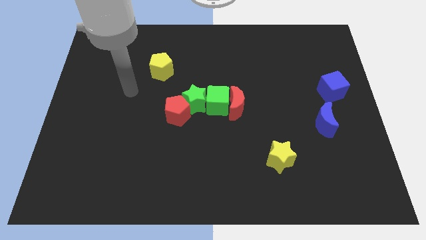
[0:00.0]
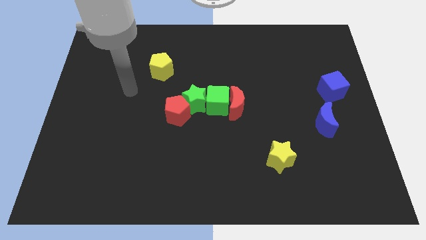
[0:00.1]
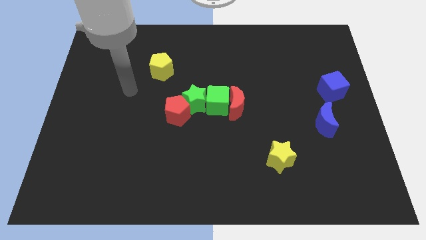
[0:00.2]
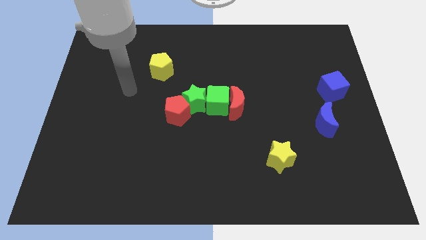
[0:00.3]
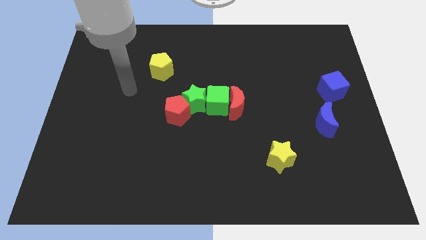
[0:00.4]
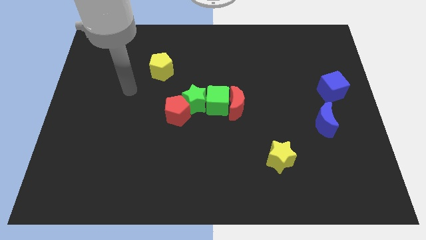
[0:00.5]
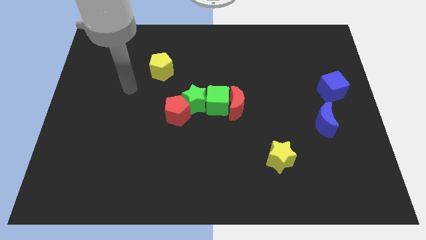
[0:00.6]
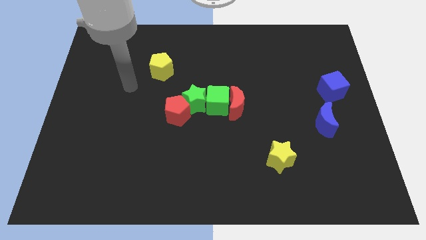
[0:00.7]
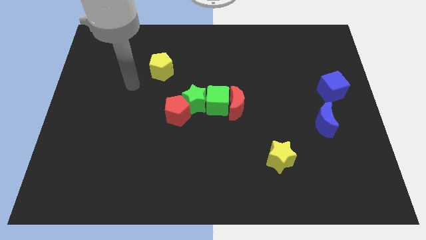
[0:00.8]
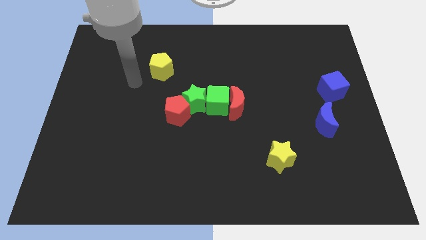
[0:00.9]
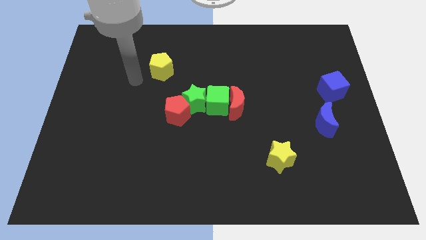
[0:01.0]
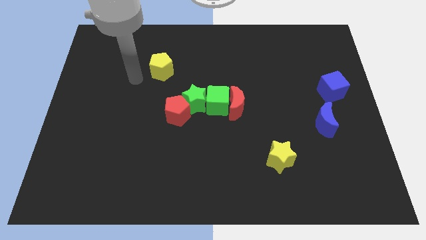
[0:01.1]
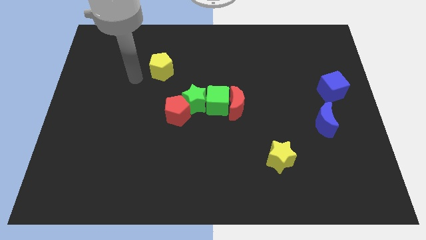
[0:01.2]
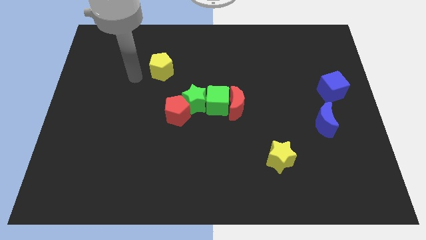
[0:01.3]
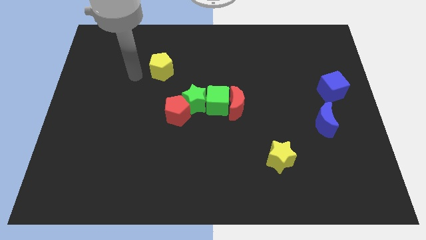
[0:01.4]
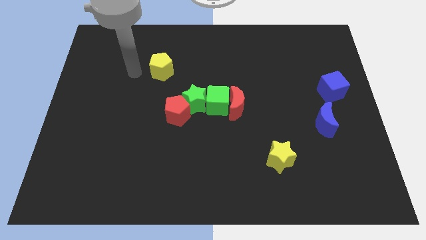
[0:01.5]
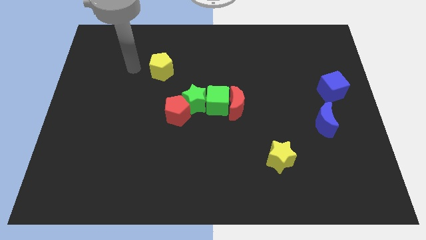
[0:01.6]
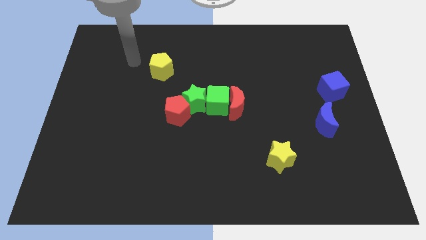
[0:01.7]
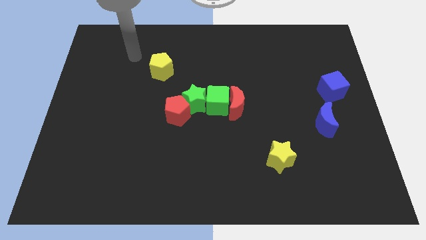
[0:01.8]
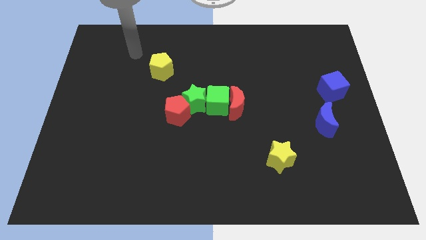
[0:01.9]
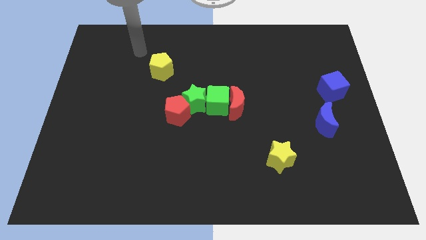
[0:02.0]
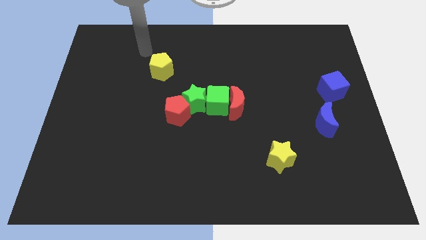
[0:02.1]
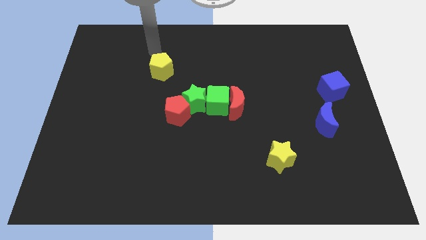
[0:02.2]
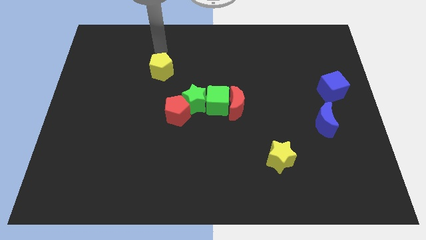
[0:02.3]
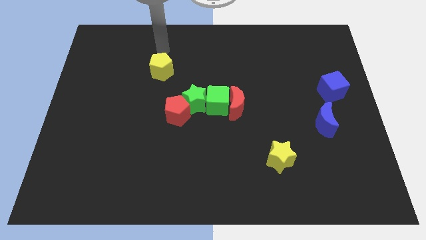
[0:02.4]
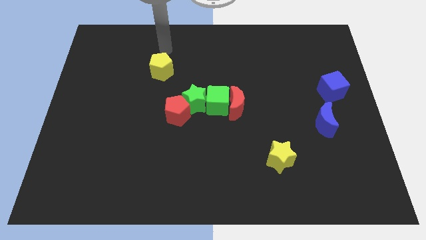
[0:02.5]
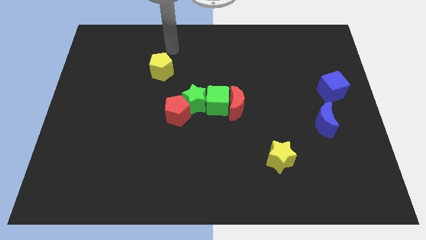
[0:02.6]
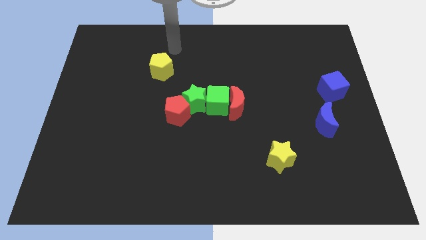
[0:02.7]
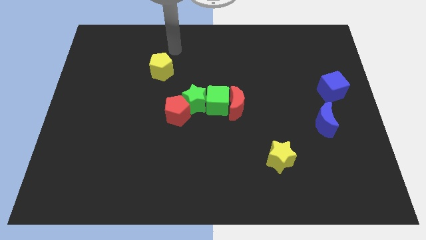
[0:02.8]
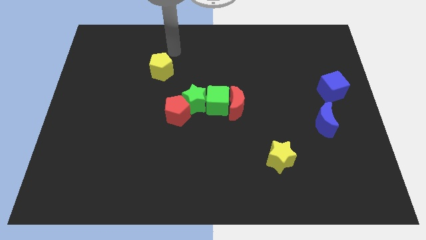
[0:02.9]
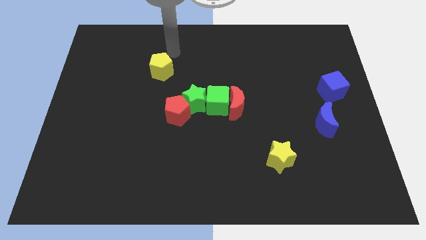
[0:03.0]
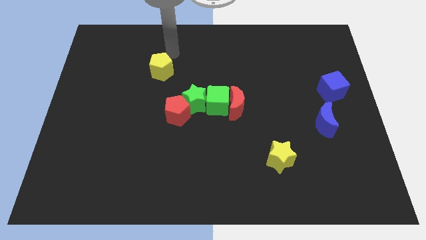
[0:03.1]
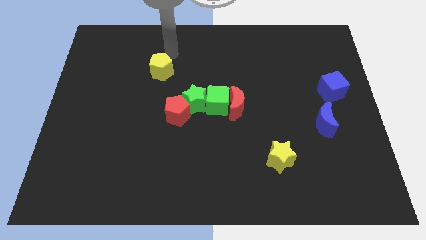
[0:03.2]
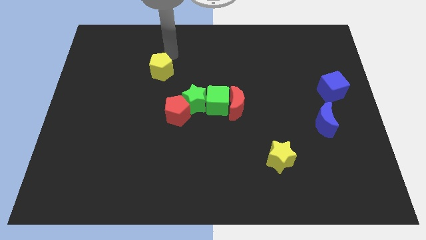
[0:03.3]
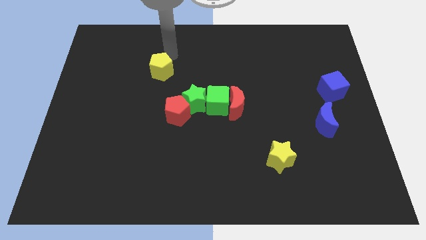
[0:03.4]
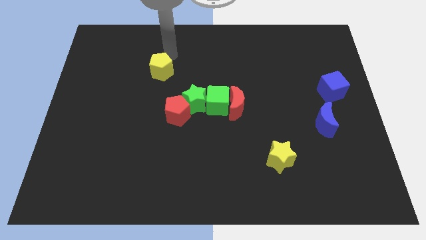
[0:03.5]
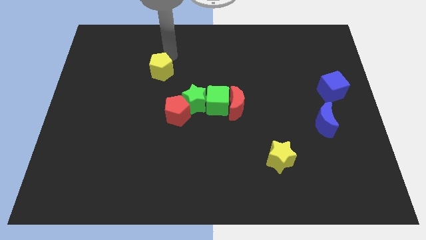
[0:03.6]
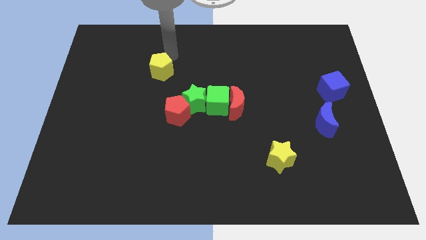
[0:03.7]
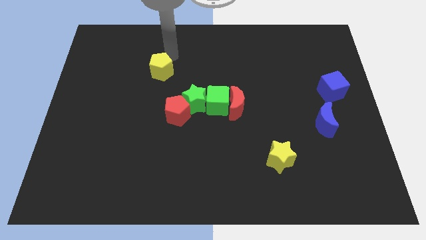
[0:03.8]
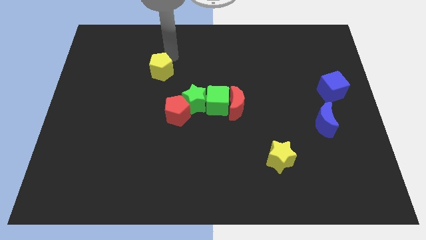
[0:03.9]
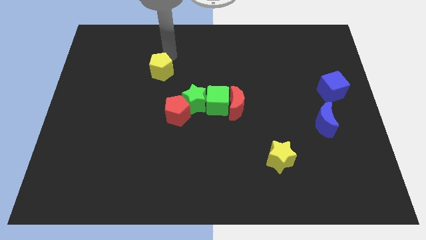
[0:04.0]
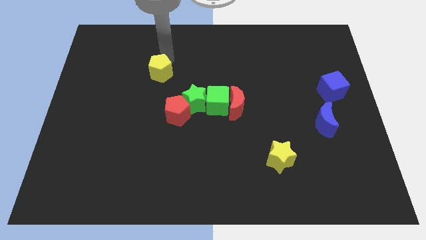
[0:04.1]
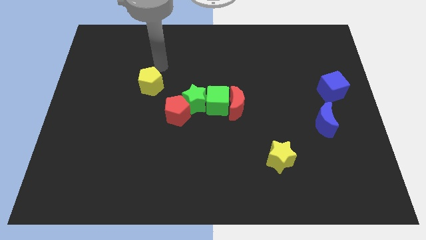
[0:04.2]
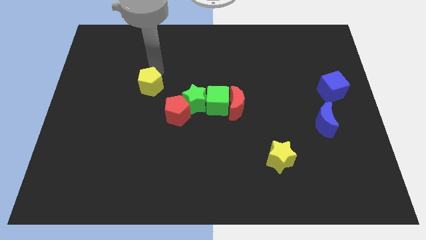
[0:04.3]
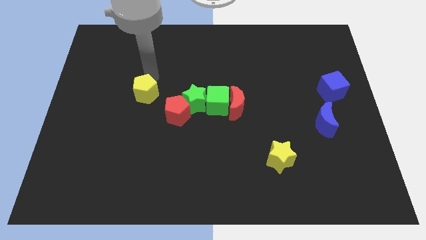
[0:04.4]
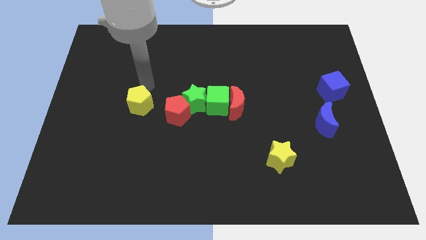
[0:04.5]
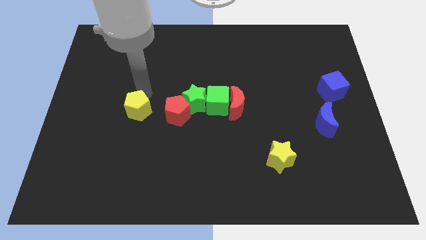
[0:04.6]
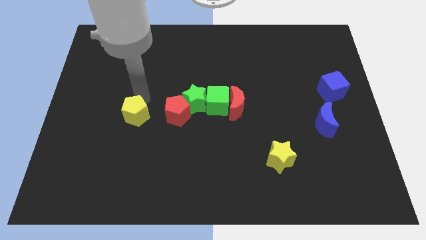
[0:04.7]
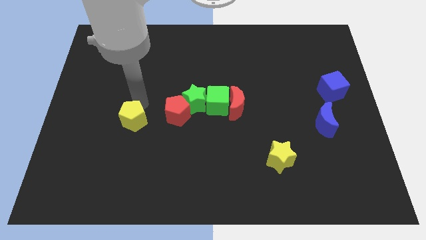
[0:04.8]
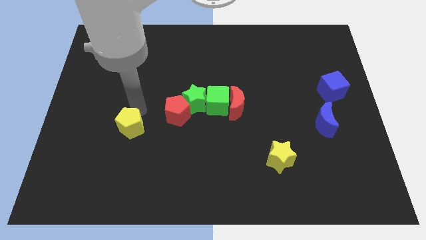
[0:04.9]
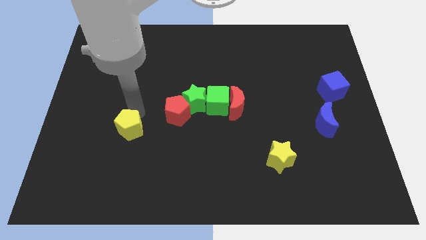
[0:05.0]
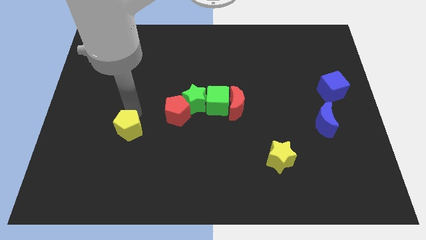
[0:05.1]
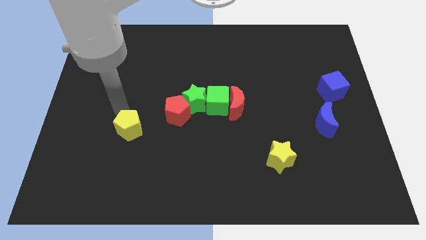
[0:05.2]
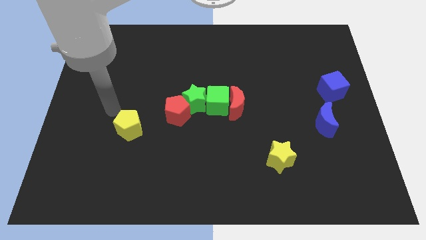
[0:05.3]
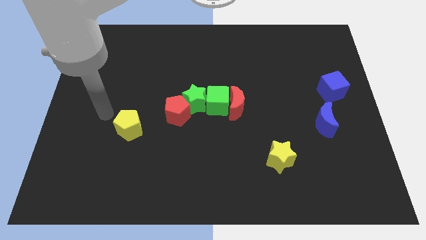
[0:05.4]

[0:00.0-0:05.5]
move the yellow pentagon to left side of red pentagon

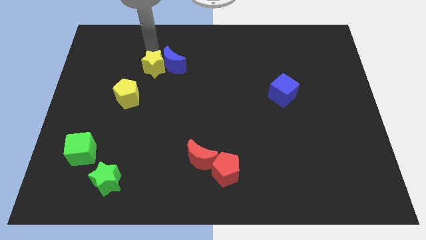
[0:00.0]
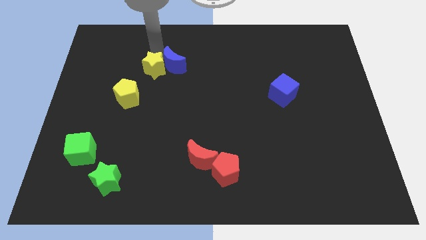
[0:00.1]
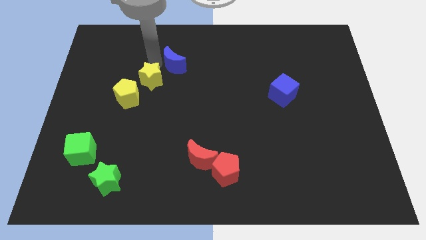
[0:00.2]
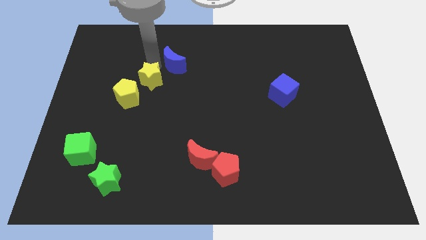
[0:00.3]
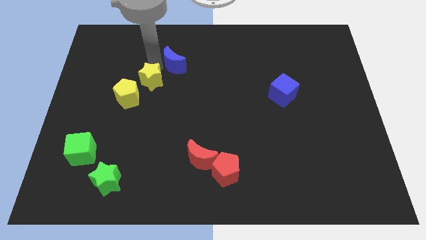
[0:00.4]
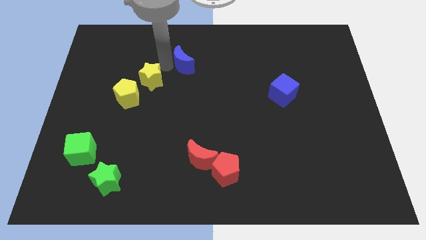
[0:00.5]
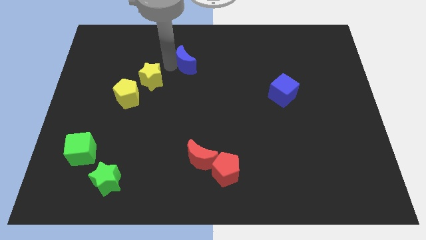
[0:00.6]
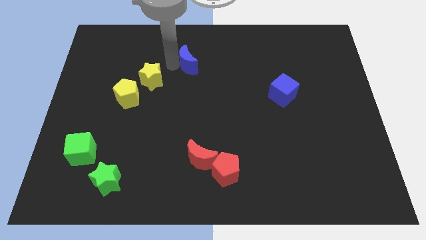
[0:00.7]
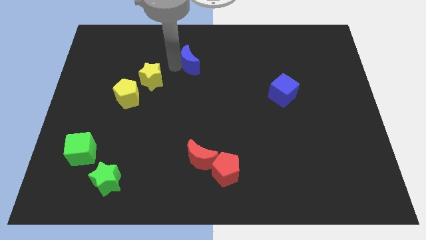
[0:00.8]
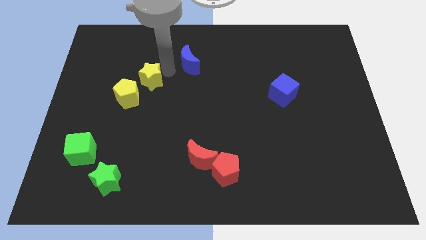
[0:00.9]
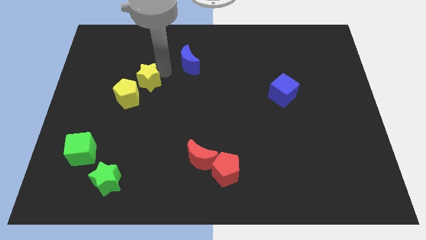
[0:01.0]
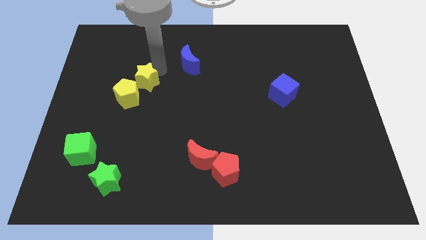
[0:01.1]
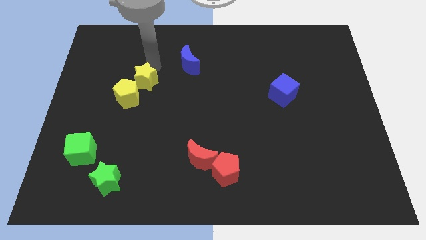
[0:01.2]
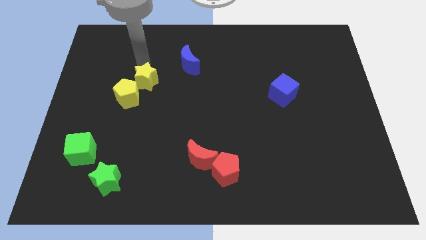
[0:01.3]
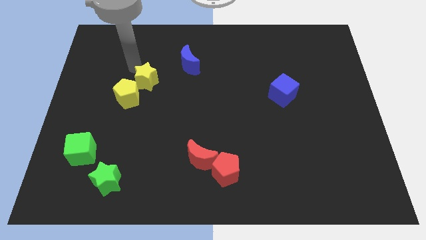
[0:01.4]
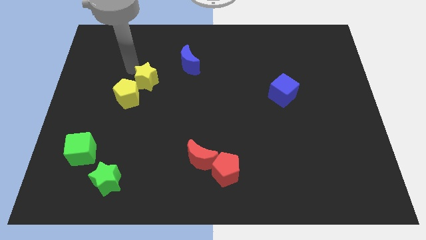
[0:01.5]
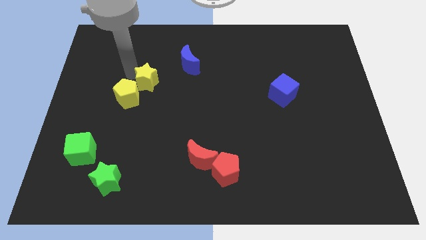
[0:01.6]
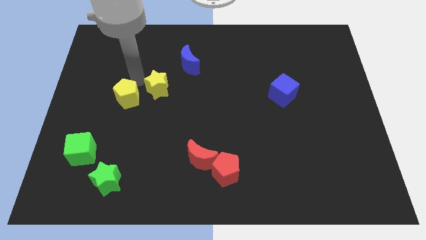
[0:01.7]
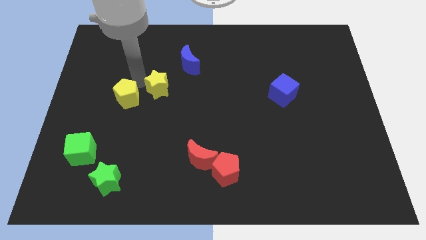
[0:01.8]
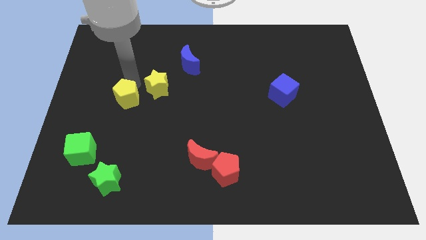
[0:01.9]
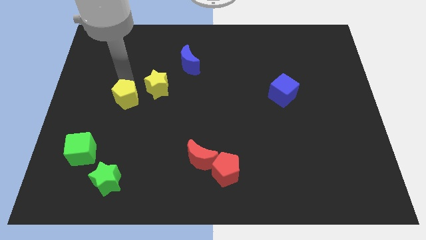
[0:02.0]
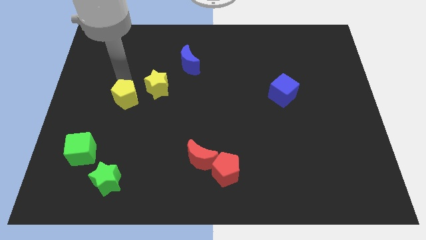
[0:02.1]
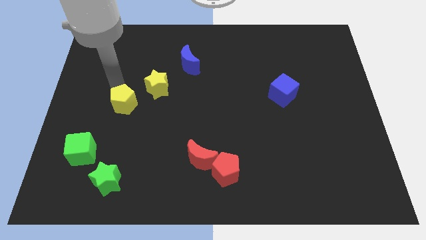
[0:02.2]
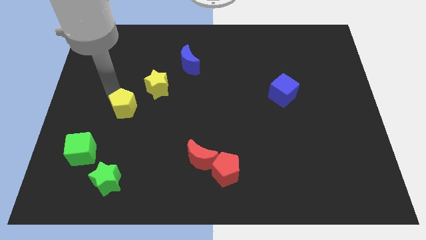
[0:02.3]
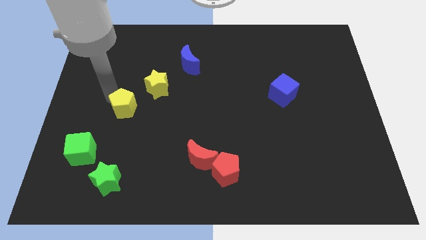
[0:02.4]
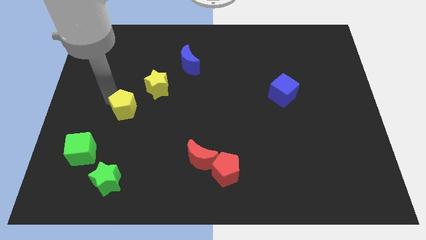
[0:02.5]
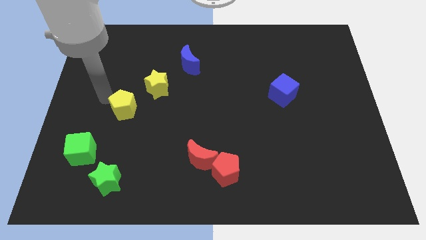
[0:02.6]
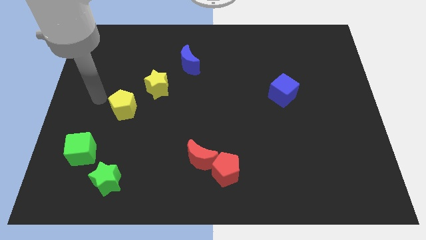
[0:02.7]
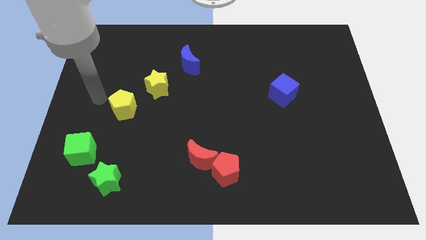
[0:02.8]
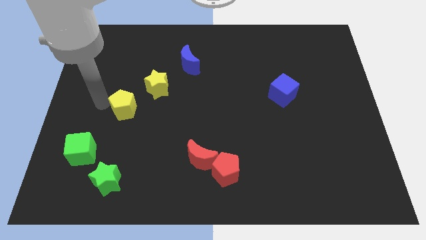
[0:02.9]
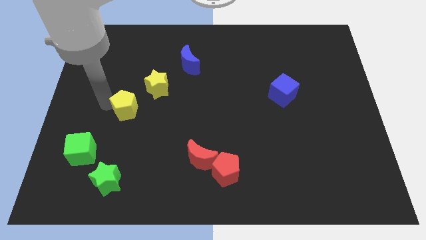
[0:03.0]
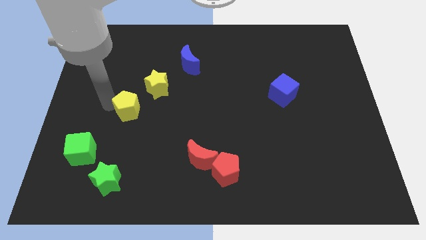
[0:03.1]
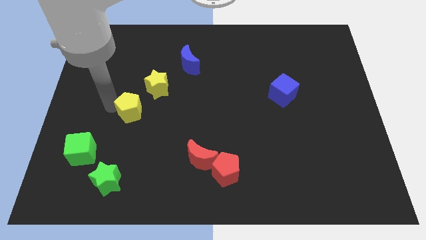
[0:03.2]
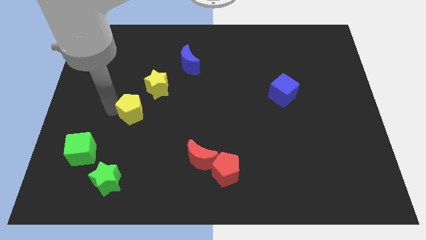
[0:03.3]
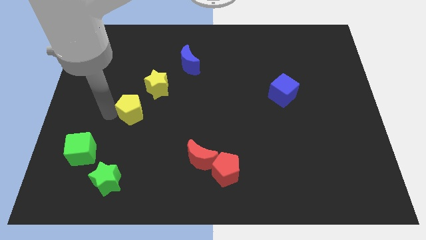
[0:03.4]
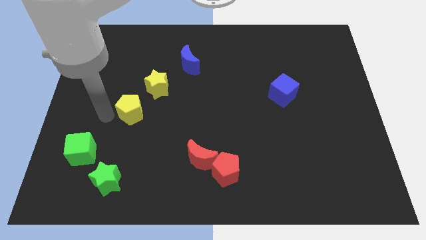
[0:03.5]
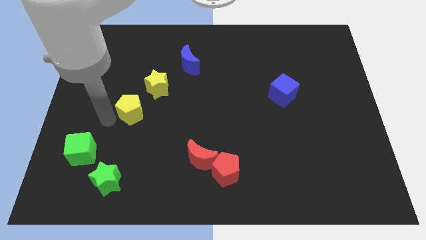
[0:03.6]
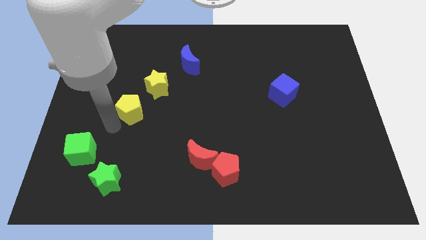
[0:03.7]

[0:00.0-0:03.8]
place the yellow star and the yellow pentagon in a diagonal form
